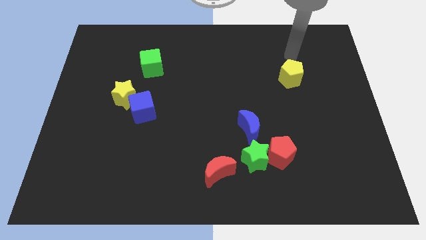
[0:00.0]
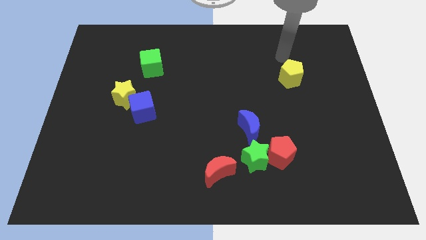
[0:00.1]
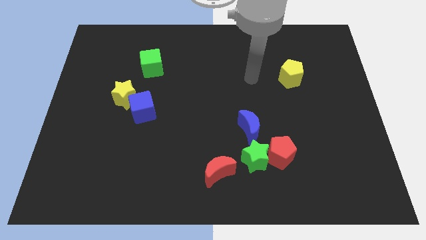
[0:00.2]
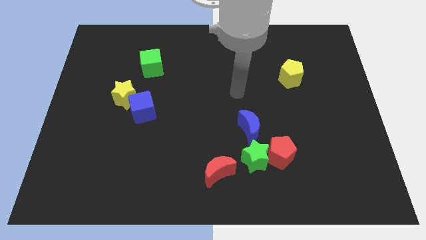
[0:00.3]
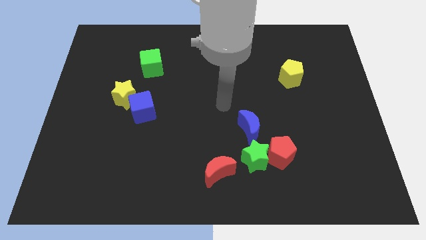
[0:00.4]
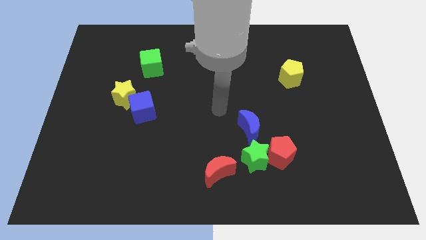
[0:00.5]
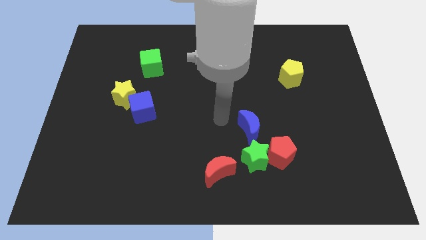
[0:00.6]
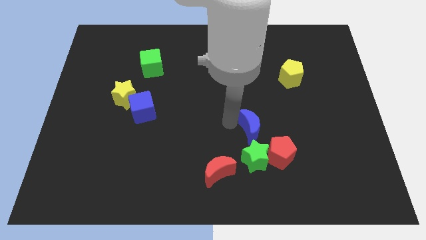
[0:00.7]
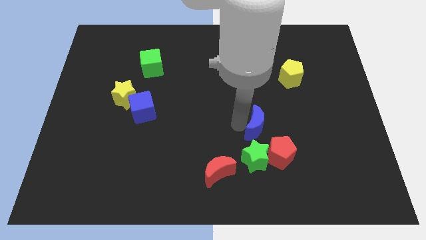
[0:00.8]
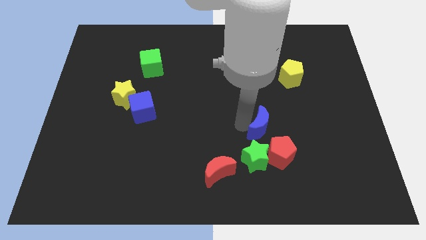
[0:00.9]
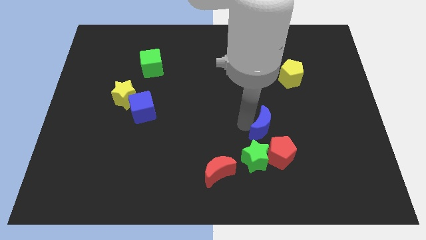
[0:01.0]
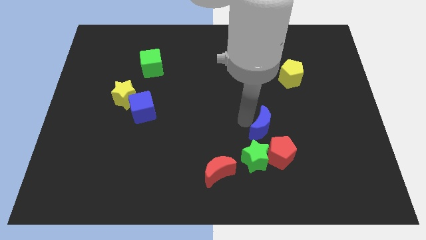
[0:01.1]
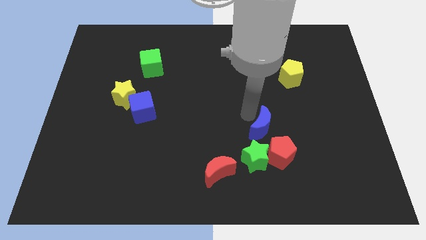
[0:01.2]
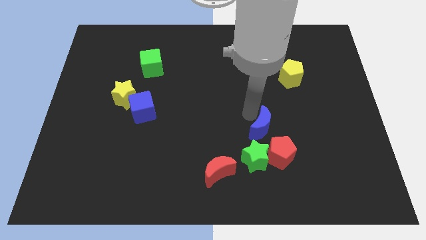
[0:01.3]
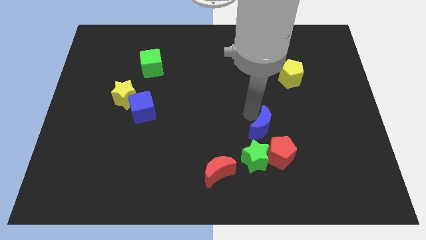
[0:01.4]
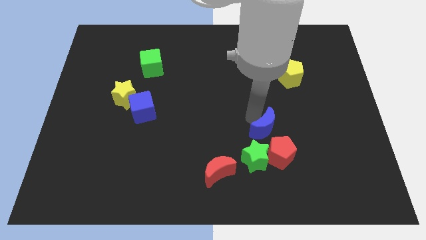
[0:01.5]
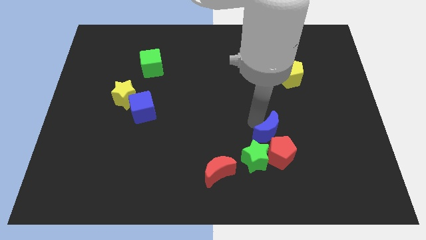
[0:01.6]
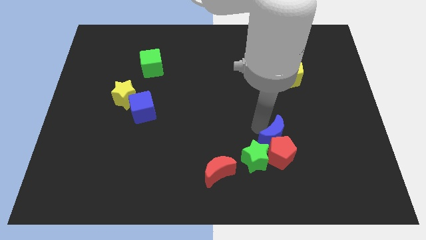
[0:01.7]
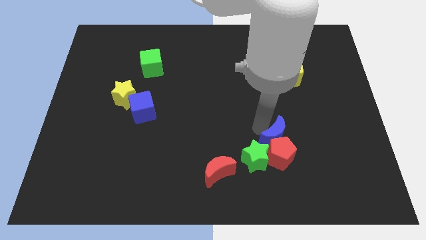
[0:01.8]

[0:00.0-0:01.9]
slide the blue moon towards the red pentagon

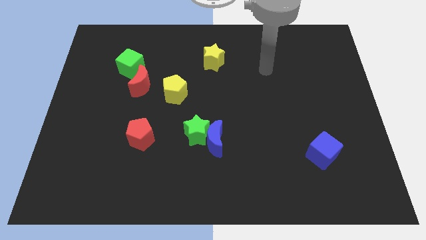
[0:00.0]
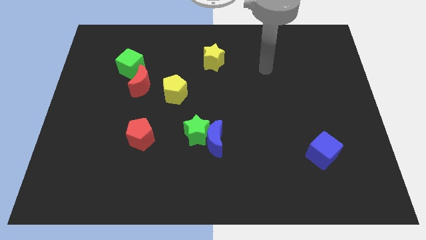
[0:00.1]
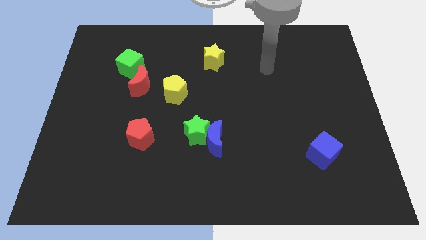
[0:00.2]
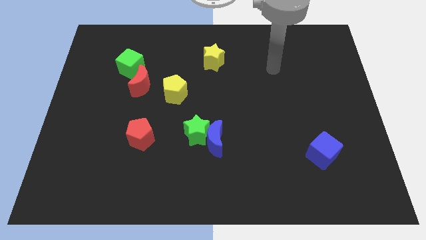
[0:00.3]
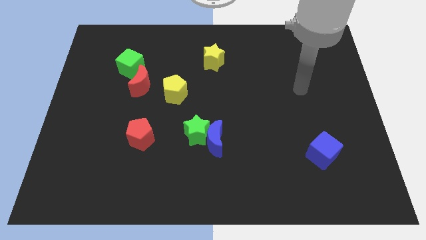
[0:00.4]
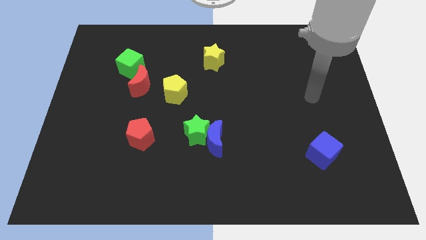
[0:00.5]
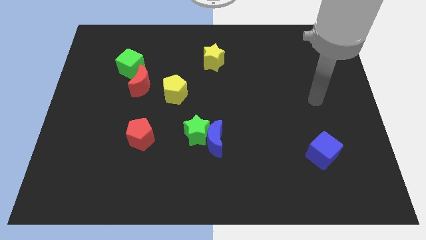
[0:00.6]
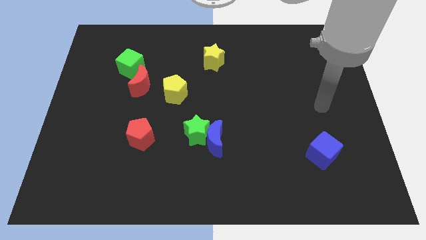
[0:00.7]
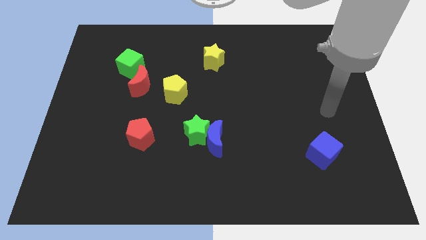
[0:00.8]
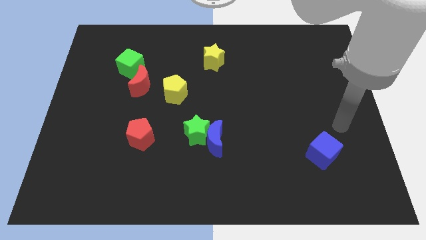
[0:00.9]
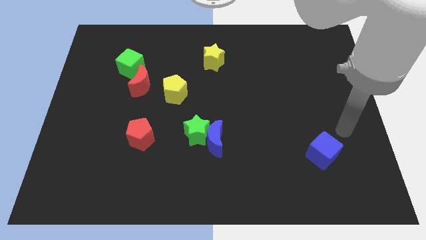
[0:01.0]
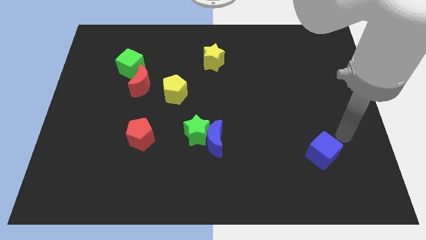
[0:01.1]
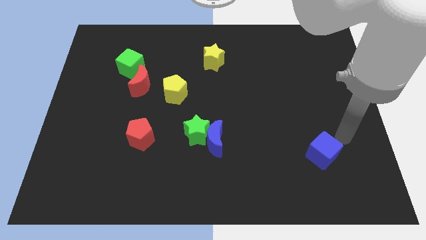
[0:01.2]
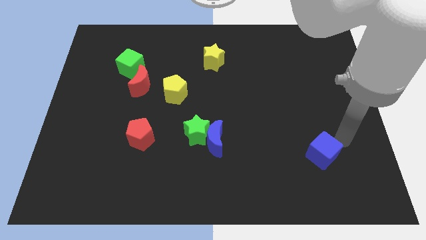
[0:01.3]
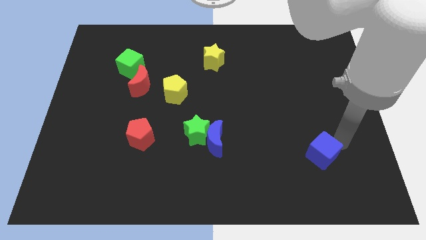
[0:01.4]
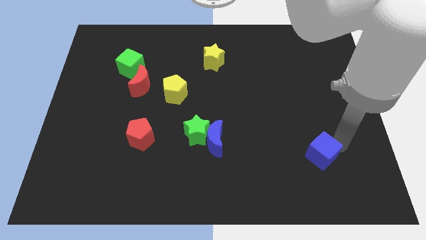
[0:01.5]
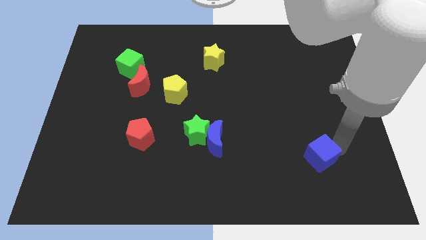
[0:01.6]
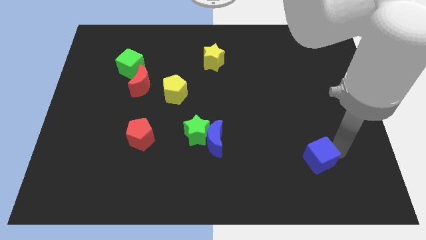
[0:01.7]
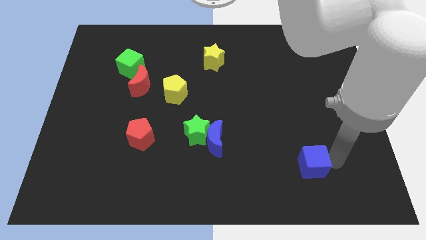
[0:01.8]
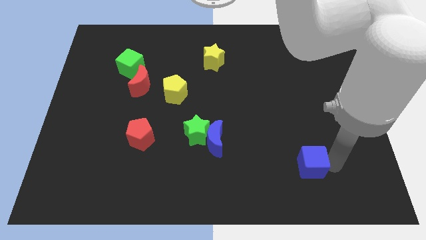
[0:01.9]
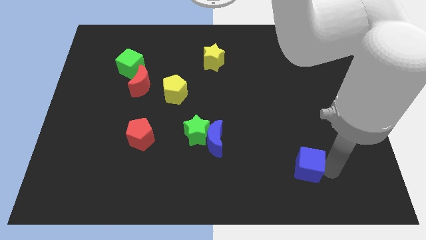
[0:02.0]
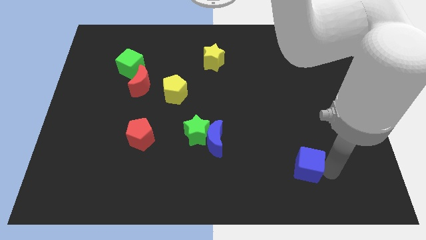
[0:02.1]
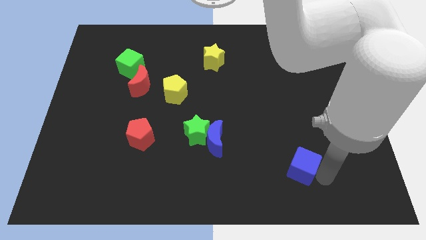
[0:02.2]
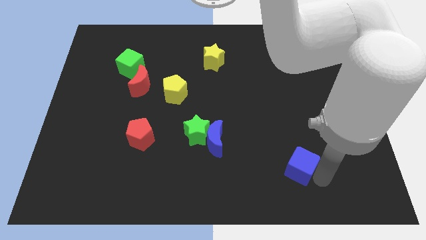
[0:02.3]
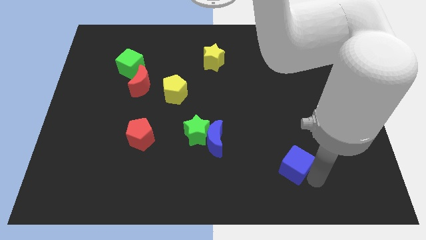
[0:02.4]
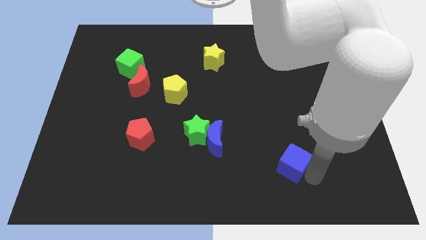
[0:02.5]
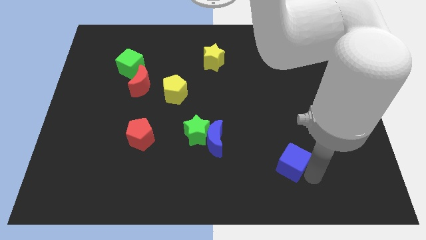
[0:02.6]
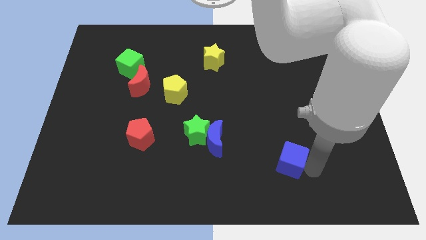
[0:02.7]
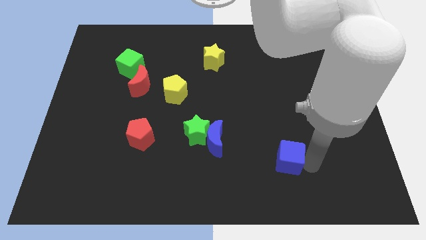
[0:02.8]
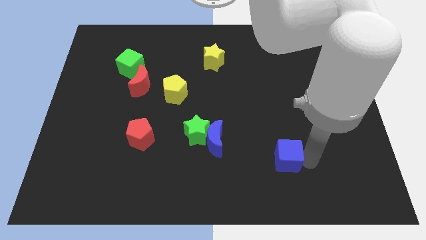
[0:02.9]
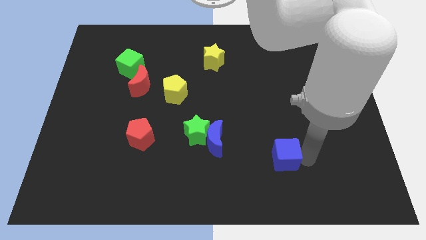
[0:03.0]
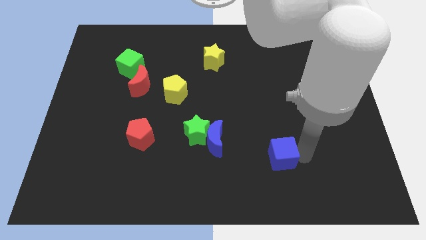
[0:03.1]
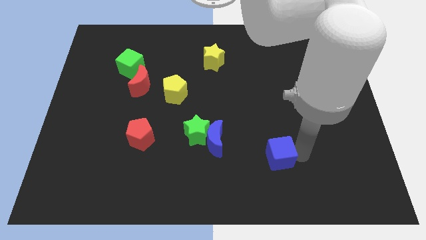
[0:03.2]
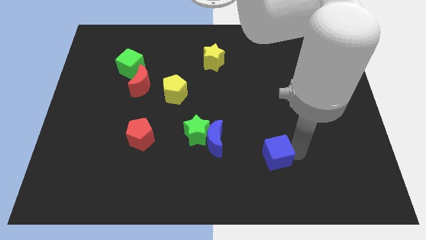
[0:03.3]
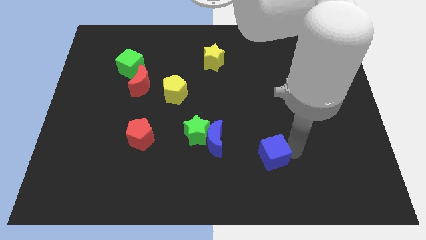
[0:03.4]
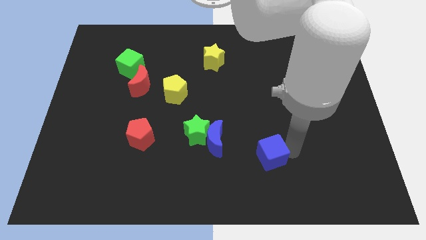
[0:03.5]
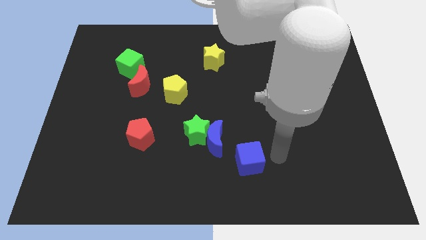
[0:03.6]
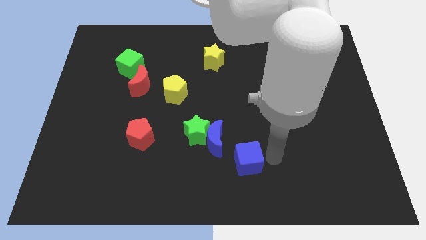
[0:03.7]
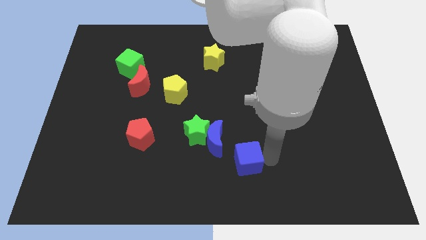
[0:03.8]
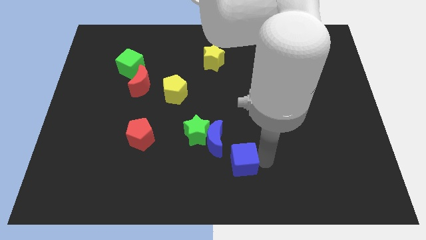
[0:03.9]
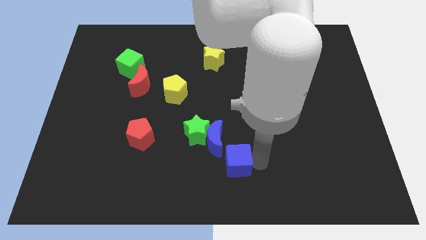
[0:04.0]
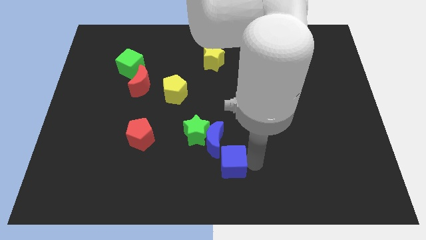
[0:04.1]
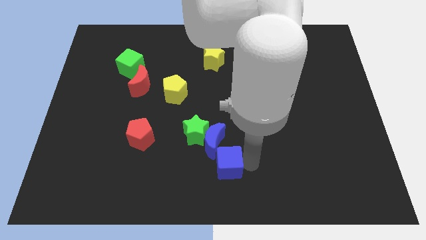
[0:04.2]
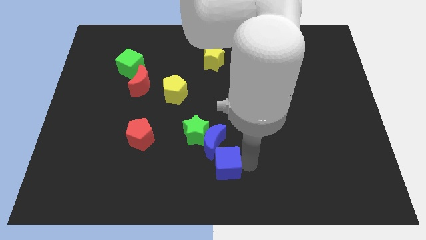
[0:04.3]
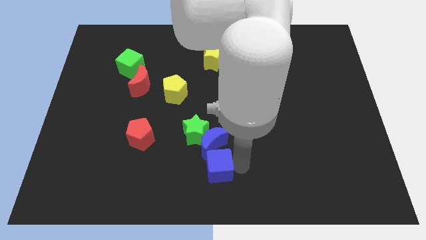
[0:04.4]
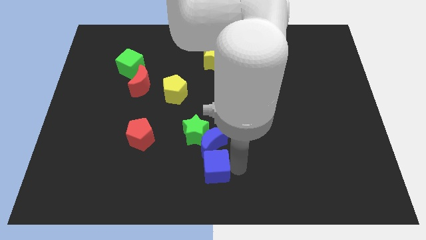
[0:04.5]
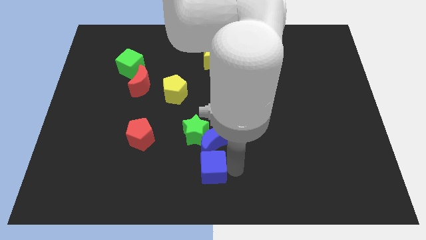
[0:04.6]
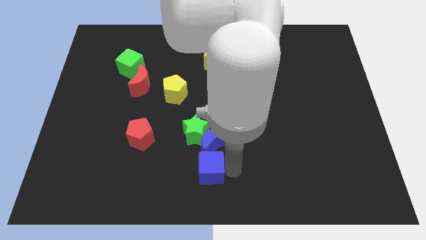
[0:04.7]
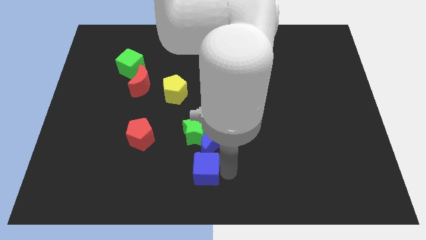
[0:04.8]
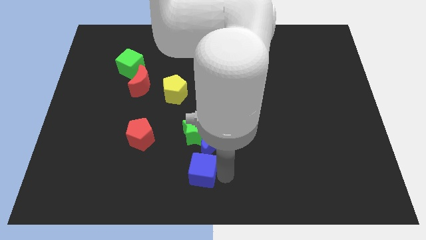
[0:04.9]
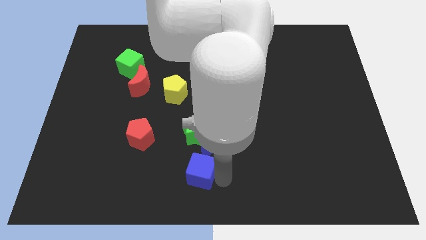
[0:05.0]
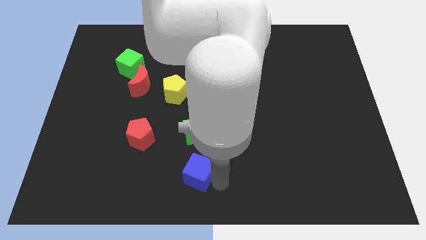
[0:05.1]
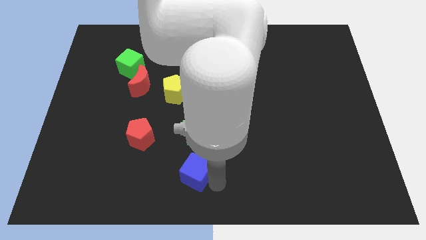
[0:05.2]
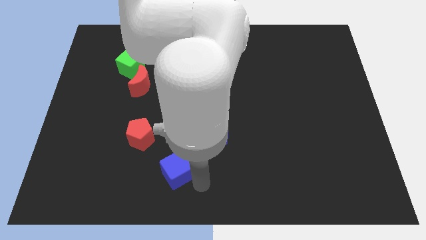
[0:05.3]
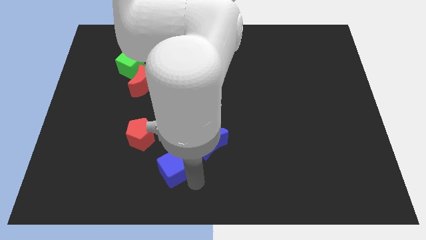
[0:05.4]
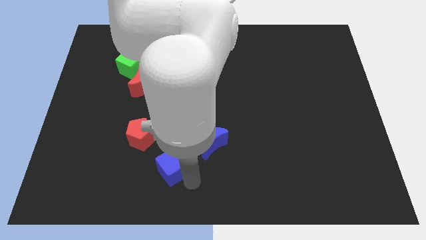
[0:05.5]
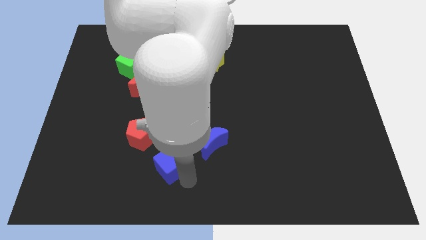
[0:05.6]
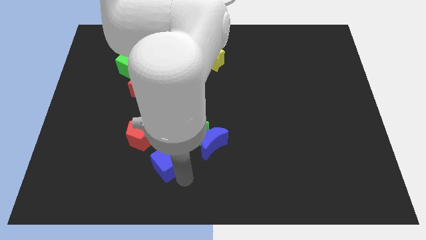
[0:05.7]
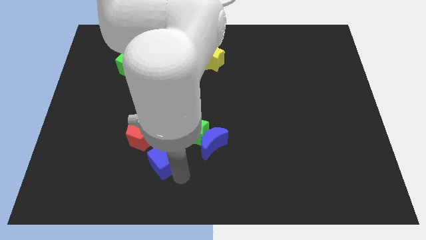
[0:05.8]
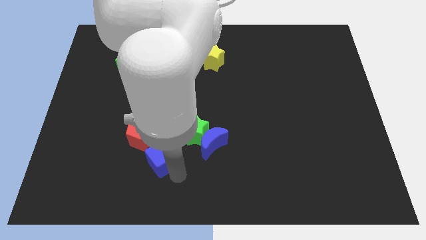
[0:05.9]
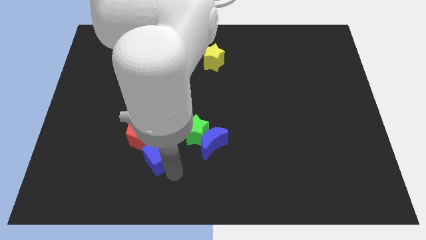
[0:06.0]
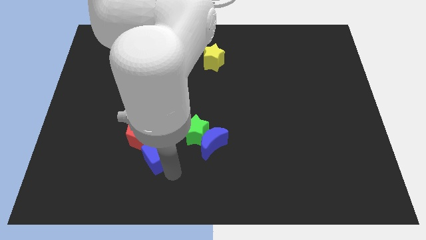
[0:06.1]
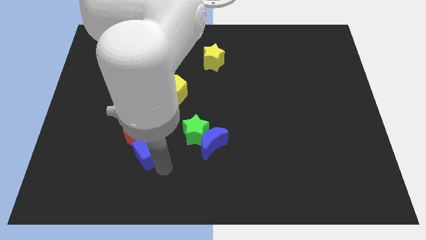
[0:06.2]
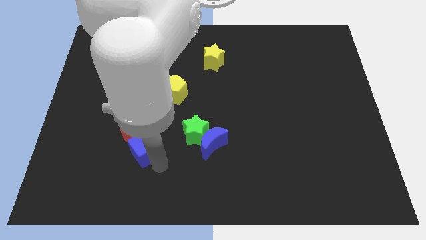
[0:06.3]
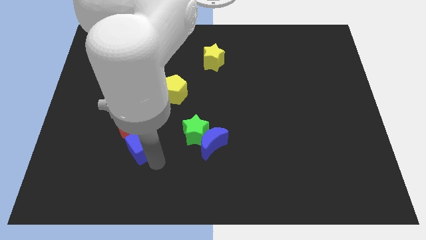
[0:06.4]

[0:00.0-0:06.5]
move the blue cube to the red pentagon
